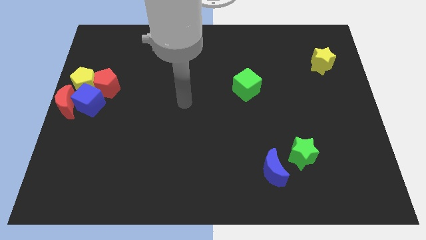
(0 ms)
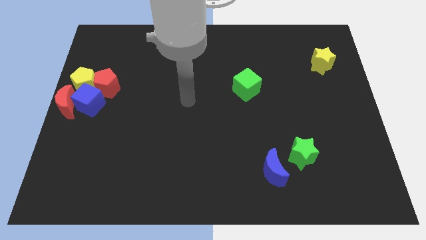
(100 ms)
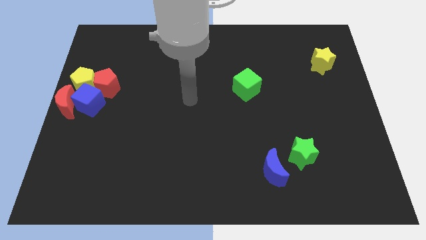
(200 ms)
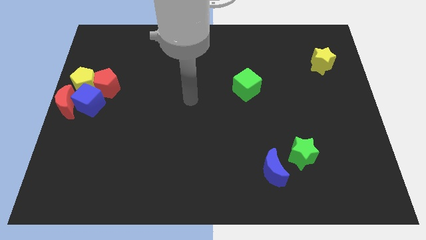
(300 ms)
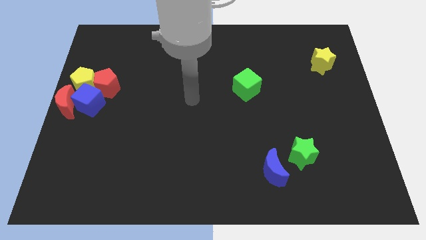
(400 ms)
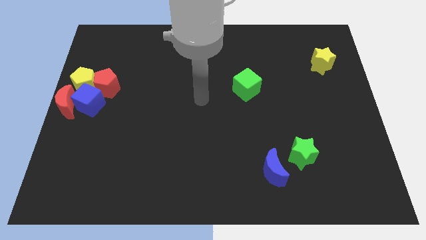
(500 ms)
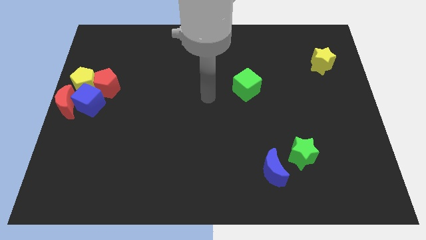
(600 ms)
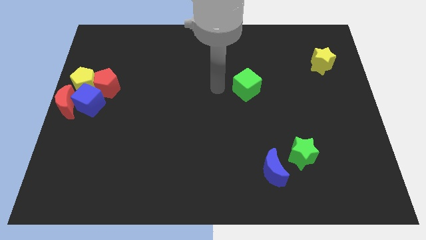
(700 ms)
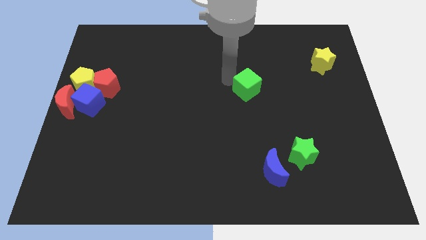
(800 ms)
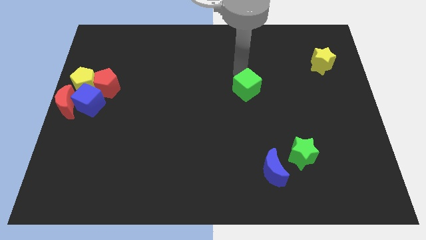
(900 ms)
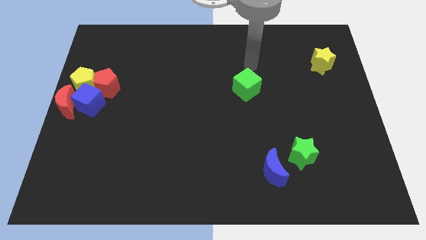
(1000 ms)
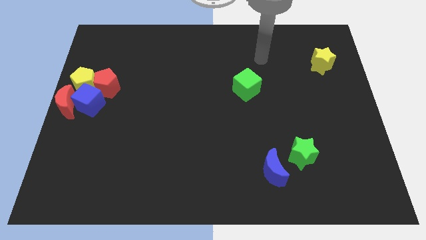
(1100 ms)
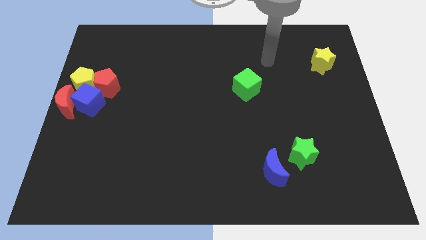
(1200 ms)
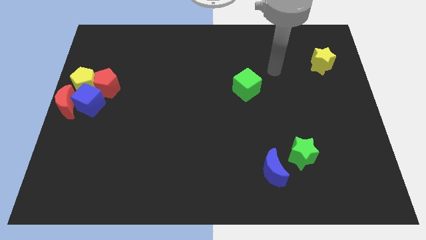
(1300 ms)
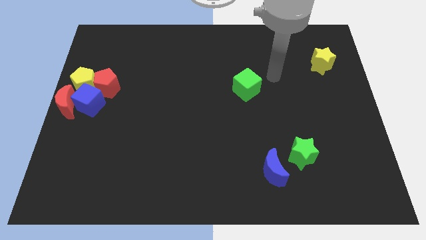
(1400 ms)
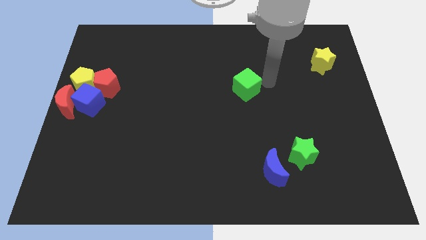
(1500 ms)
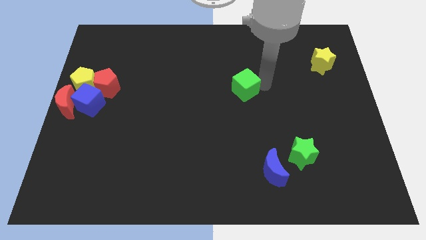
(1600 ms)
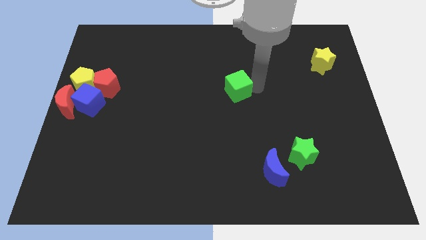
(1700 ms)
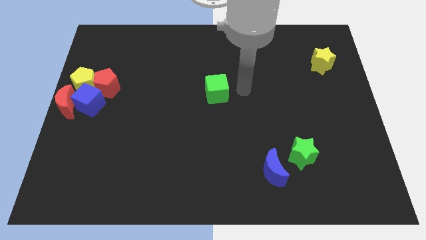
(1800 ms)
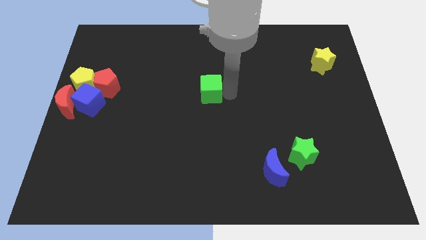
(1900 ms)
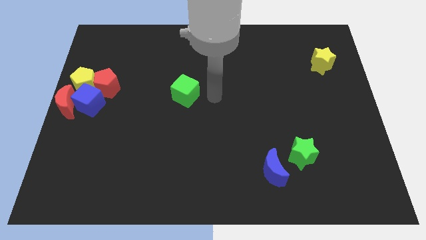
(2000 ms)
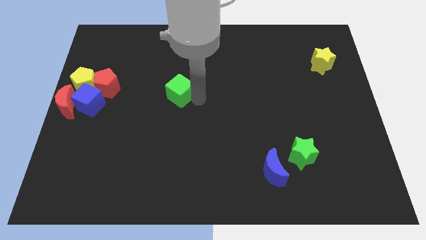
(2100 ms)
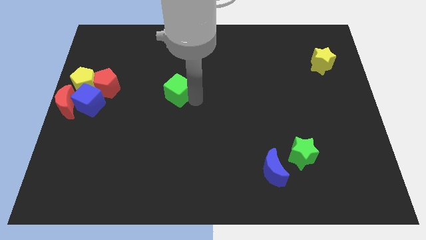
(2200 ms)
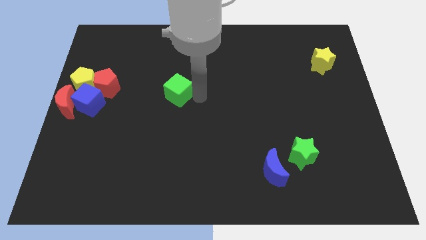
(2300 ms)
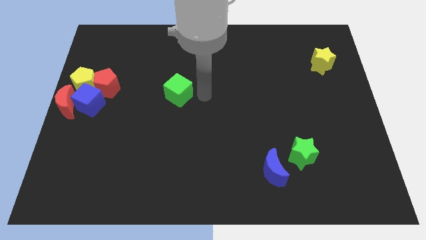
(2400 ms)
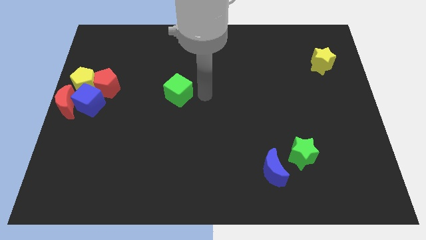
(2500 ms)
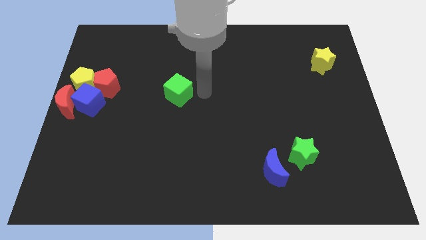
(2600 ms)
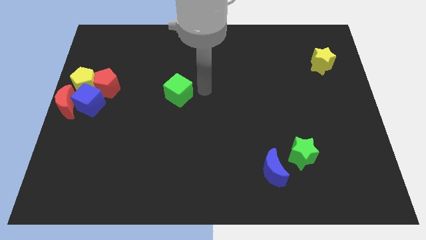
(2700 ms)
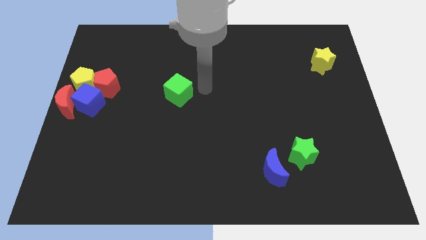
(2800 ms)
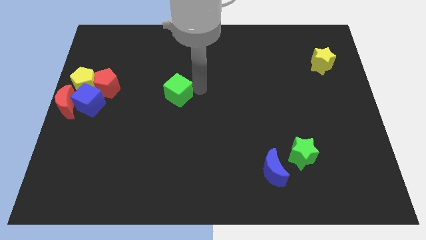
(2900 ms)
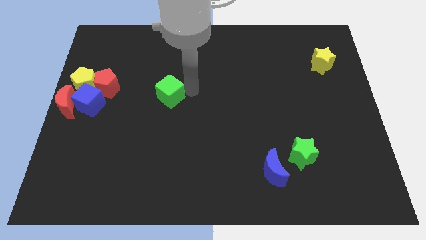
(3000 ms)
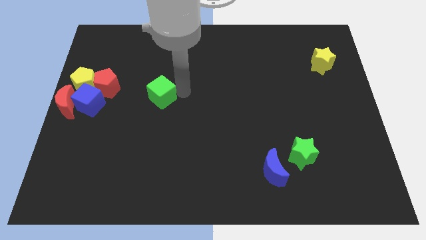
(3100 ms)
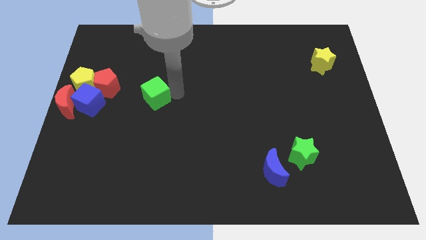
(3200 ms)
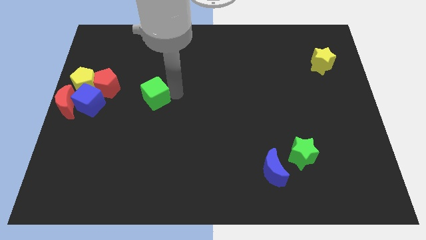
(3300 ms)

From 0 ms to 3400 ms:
place the green cube diagonal to the right of the blue cube

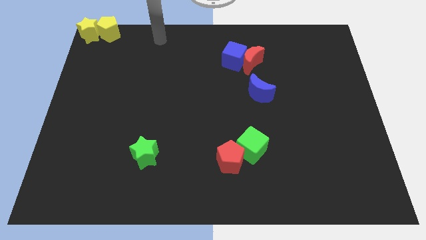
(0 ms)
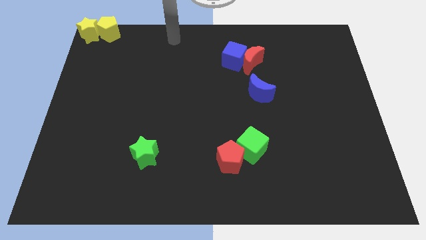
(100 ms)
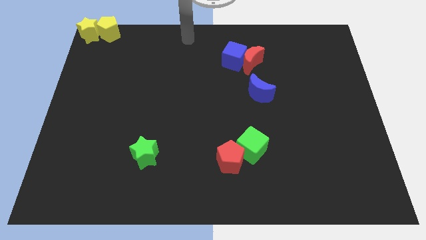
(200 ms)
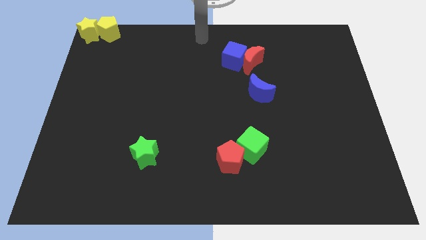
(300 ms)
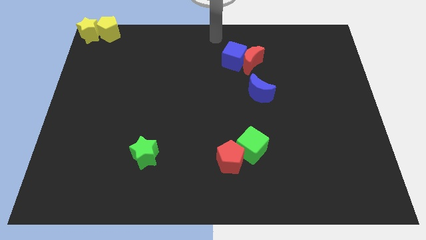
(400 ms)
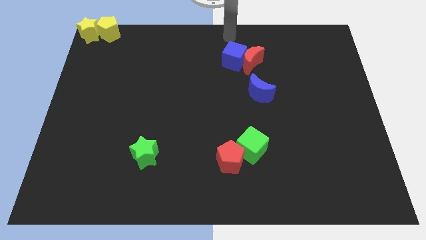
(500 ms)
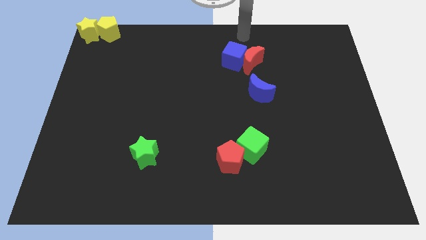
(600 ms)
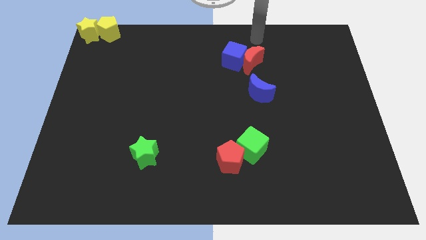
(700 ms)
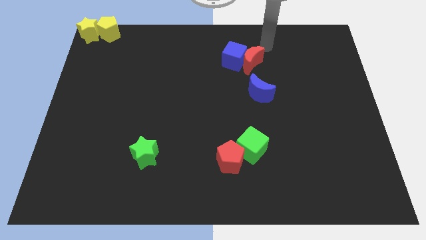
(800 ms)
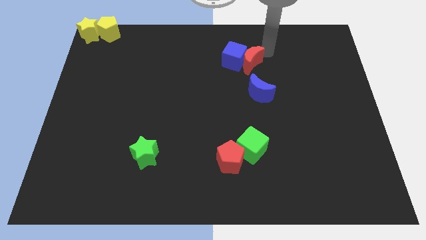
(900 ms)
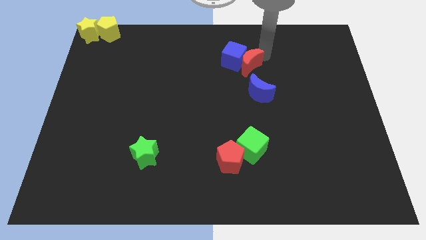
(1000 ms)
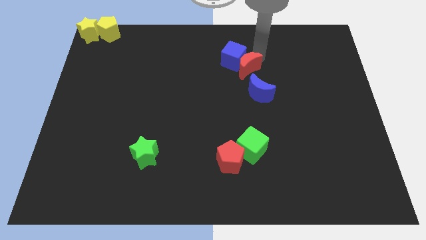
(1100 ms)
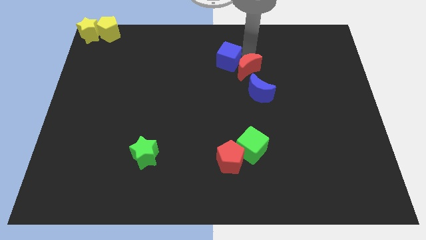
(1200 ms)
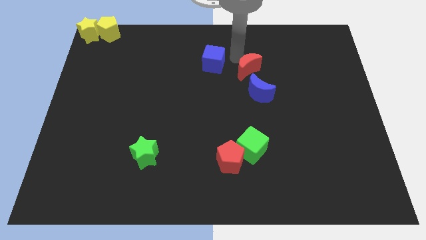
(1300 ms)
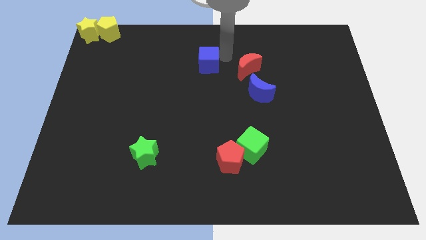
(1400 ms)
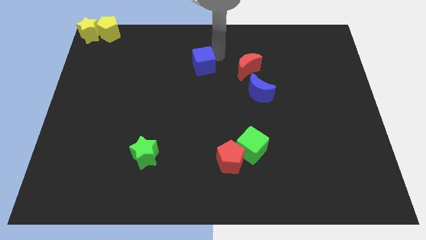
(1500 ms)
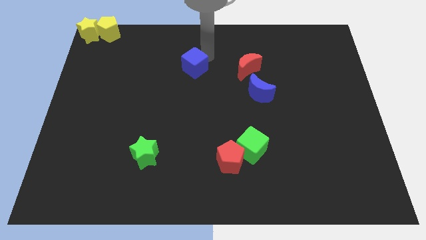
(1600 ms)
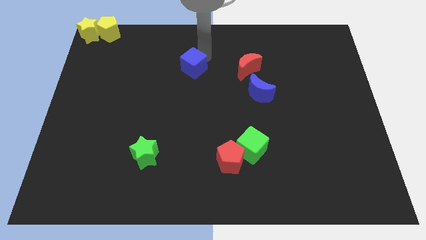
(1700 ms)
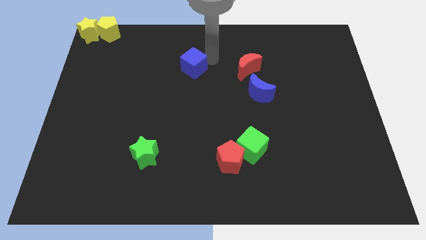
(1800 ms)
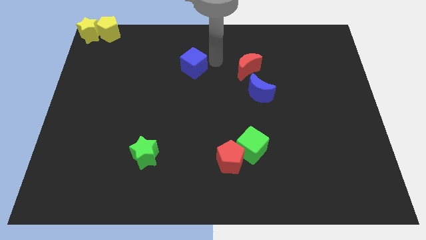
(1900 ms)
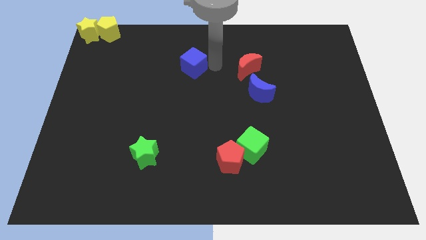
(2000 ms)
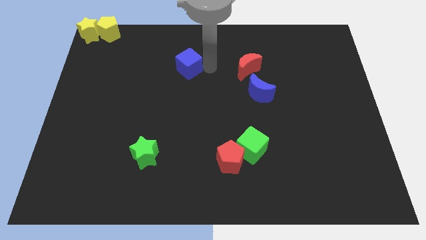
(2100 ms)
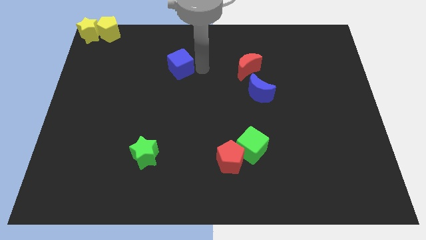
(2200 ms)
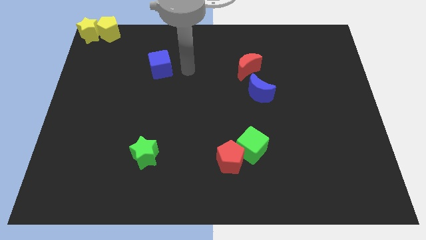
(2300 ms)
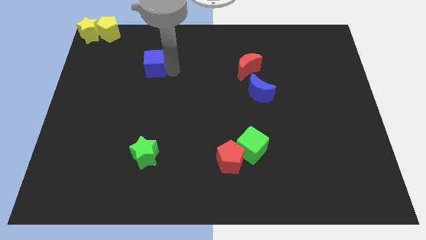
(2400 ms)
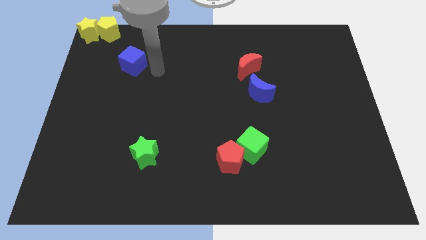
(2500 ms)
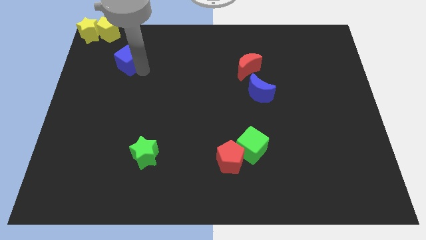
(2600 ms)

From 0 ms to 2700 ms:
place the blue cube diagonally bottom right to the yellow pentagon

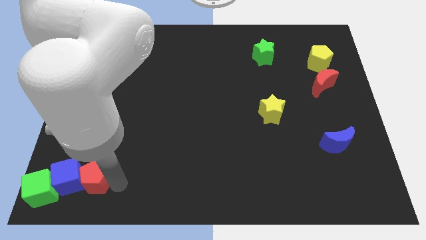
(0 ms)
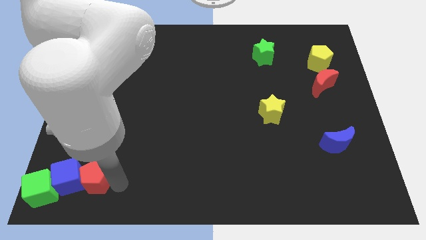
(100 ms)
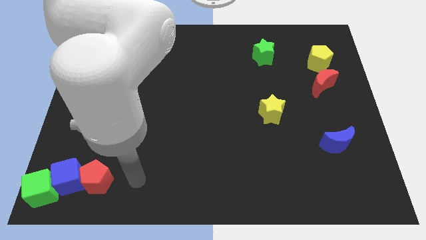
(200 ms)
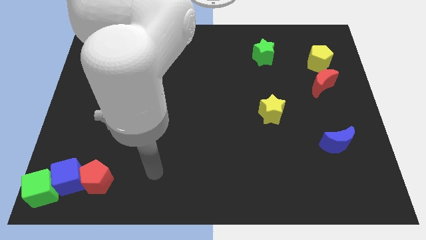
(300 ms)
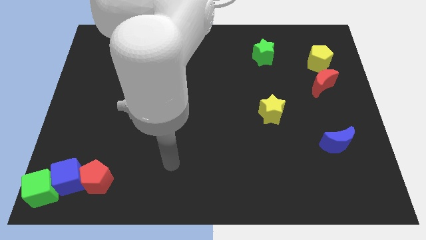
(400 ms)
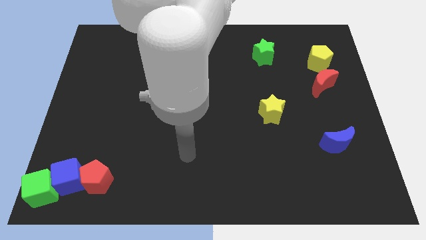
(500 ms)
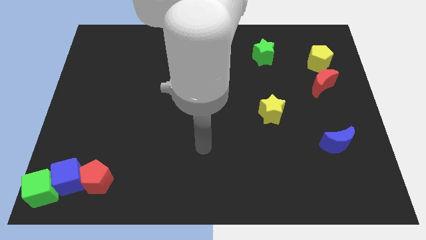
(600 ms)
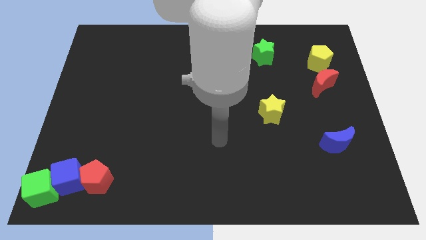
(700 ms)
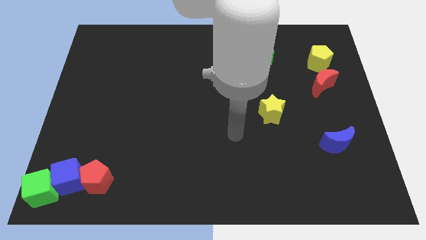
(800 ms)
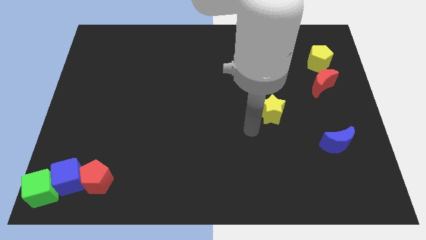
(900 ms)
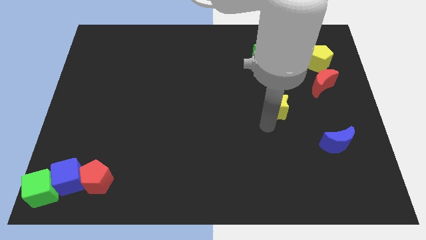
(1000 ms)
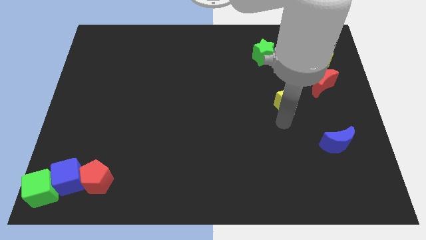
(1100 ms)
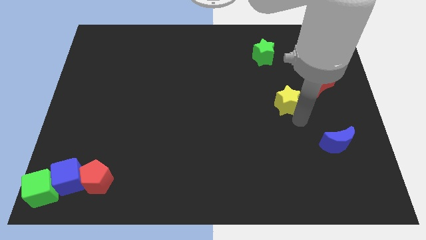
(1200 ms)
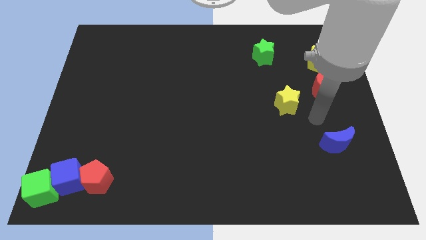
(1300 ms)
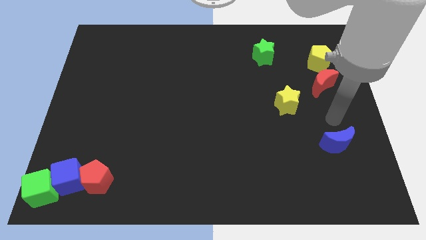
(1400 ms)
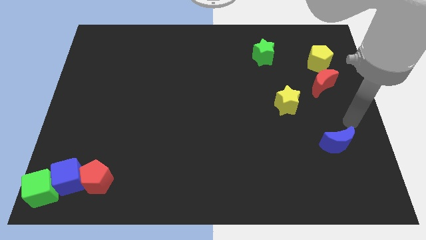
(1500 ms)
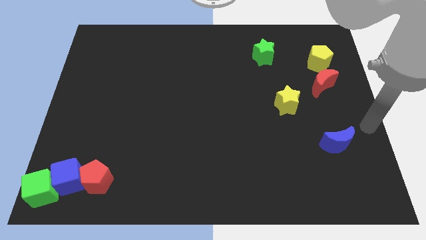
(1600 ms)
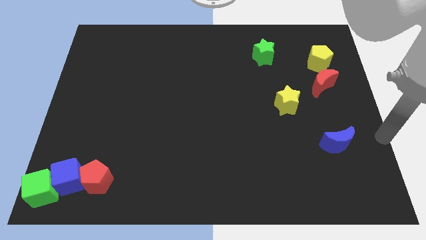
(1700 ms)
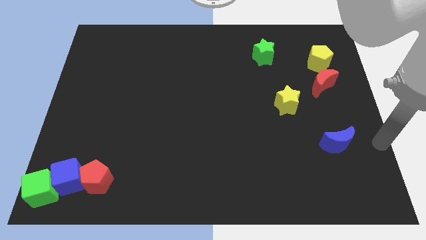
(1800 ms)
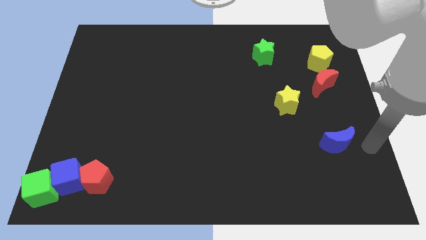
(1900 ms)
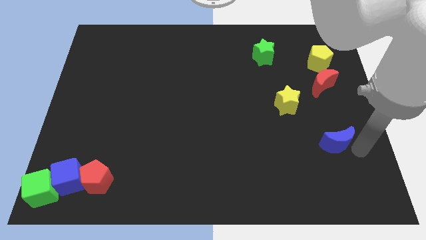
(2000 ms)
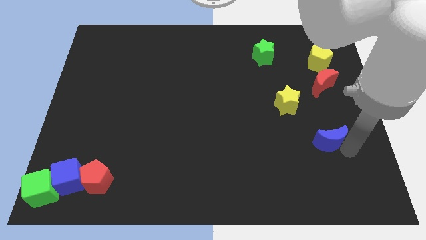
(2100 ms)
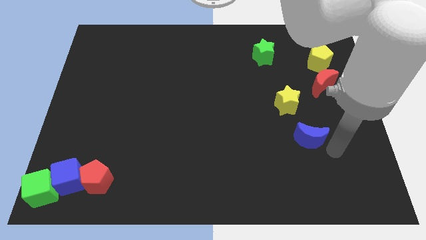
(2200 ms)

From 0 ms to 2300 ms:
slightly move the yellow star up

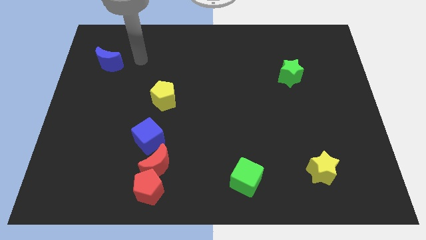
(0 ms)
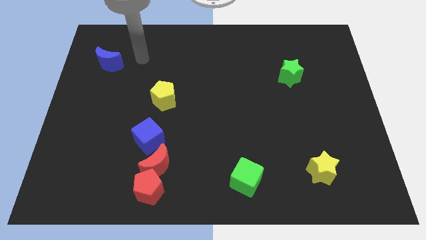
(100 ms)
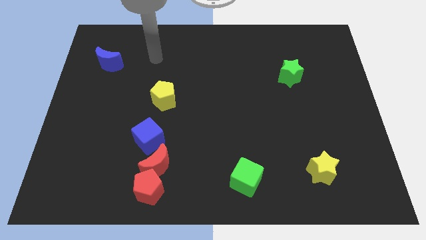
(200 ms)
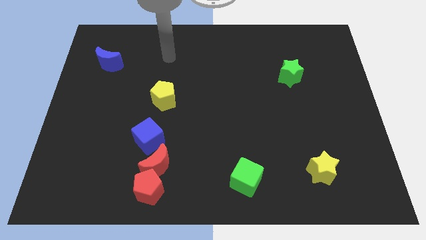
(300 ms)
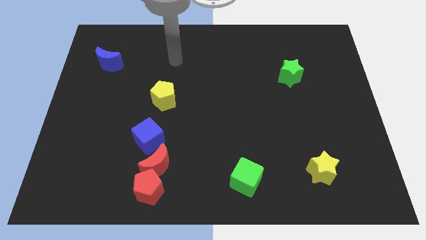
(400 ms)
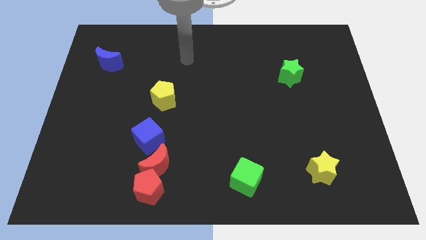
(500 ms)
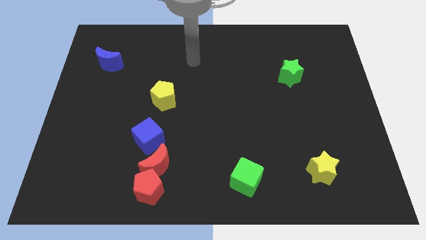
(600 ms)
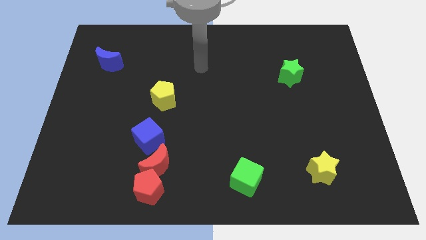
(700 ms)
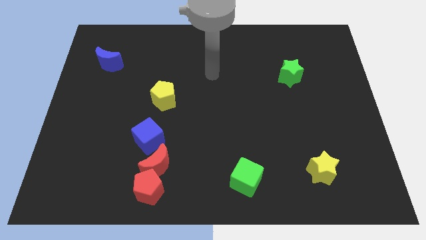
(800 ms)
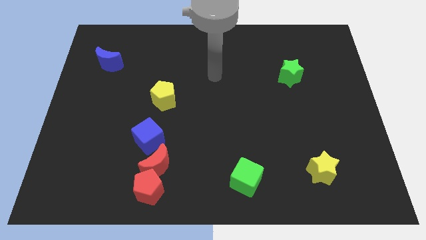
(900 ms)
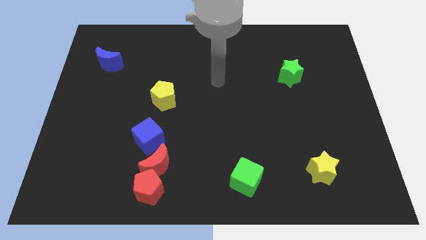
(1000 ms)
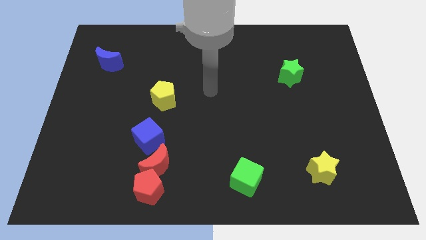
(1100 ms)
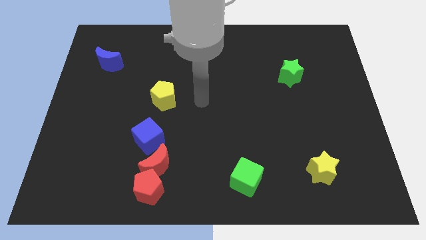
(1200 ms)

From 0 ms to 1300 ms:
move your arm at the center of the board
